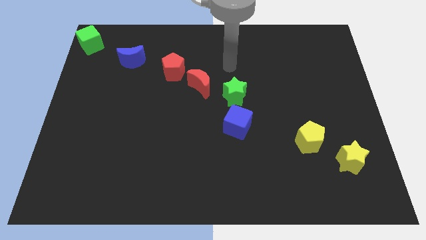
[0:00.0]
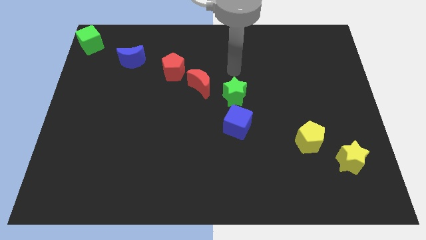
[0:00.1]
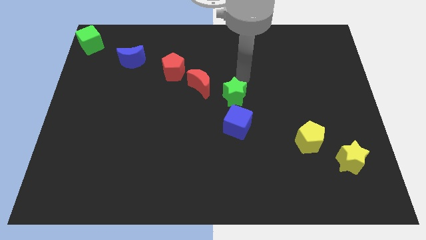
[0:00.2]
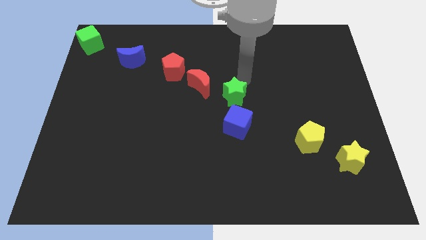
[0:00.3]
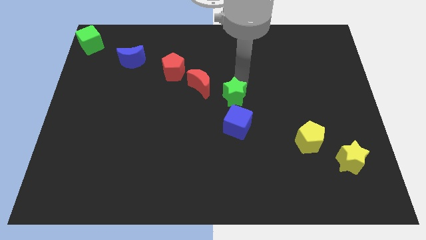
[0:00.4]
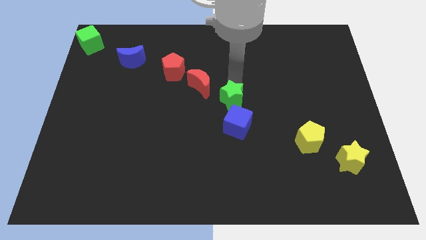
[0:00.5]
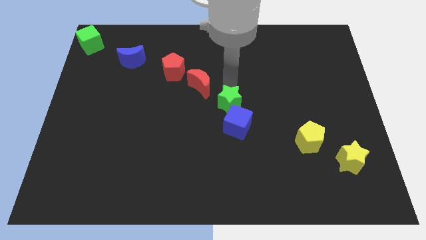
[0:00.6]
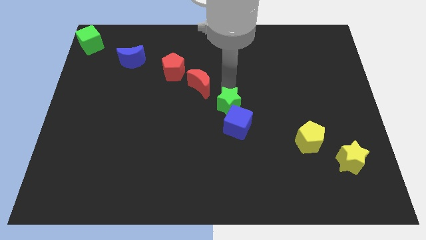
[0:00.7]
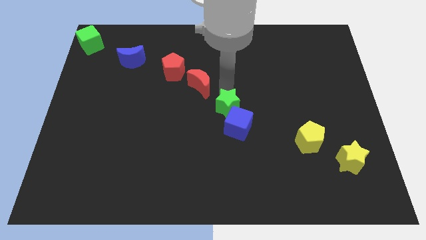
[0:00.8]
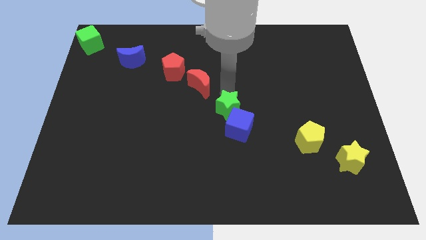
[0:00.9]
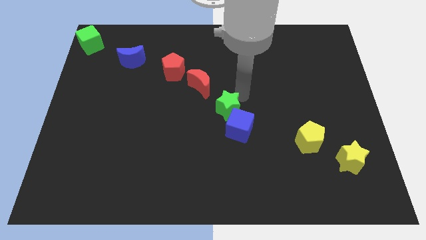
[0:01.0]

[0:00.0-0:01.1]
push the green star into the blue cube

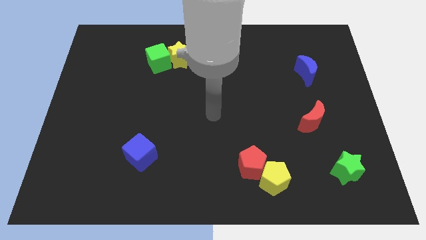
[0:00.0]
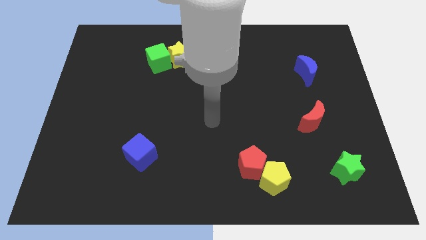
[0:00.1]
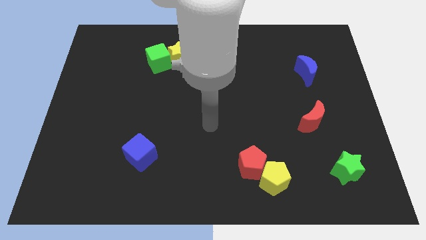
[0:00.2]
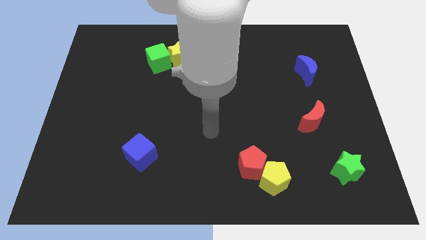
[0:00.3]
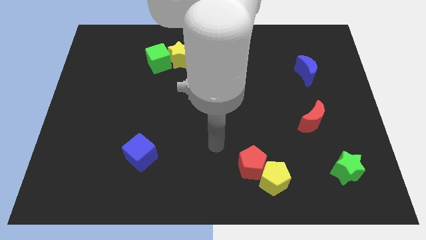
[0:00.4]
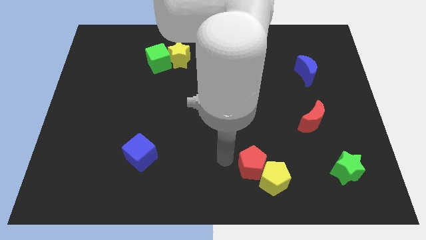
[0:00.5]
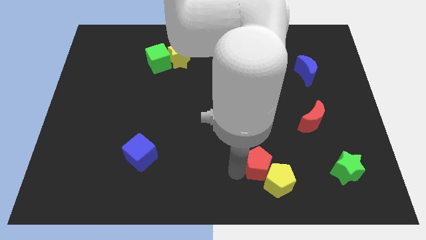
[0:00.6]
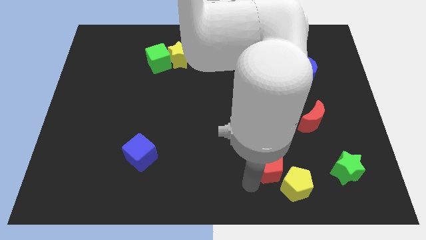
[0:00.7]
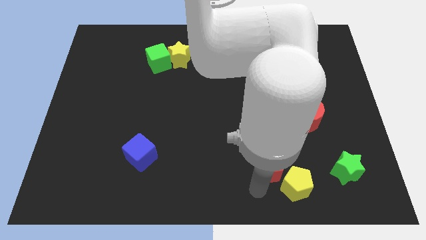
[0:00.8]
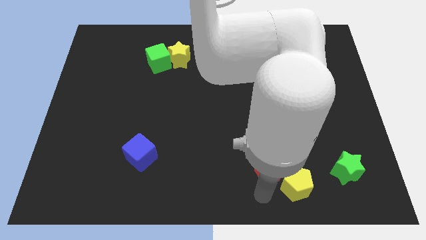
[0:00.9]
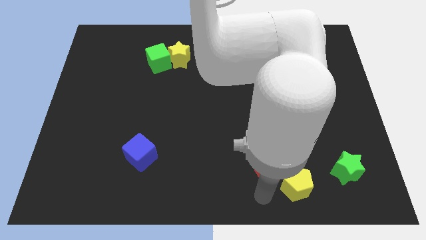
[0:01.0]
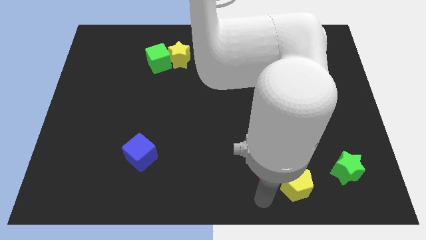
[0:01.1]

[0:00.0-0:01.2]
slightly push the group of pentagons to the right

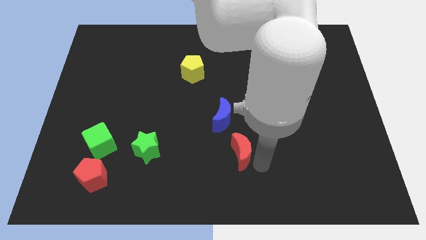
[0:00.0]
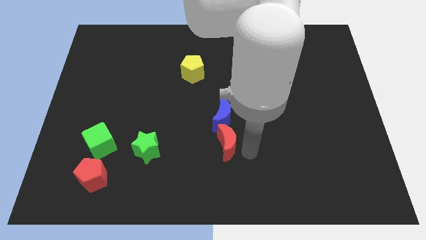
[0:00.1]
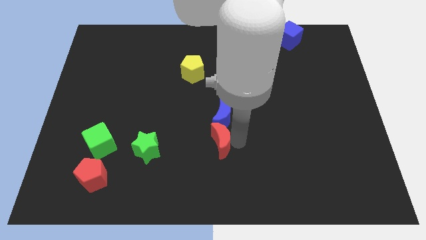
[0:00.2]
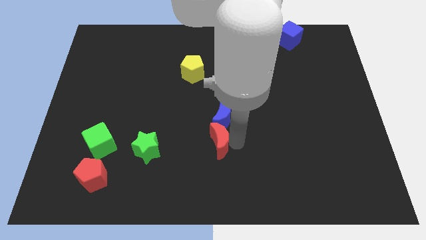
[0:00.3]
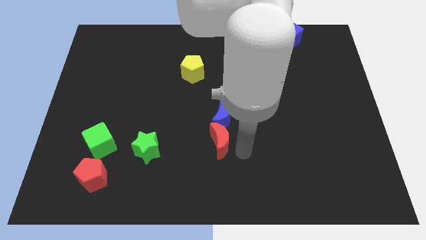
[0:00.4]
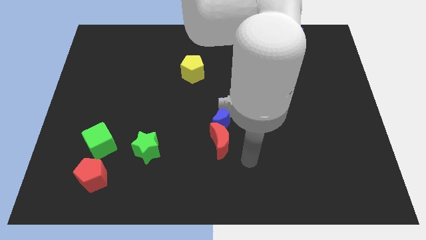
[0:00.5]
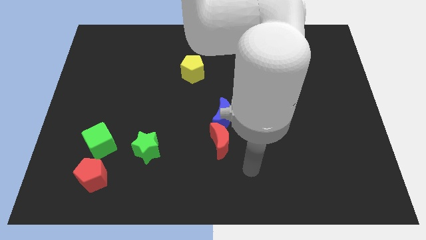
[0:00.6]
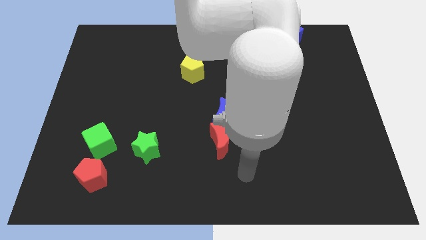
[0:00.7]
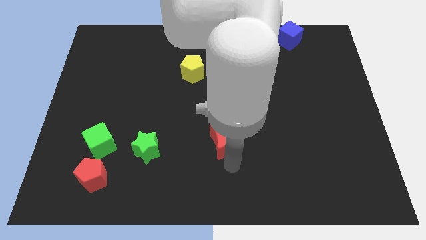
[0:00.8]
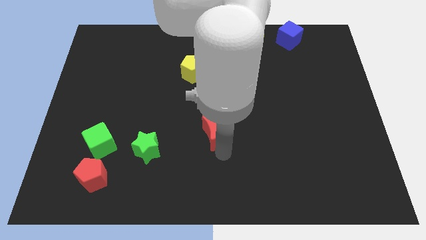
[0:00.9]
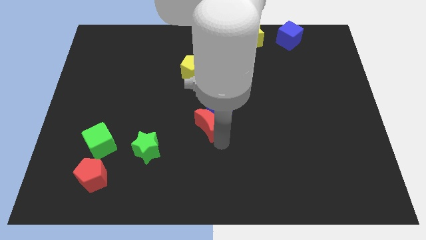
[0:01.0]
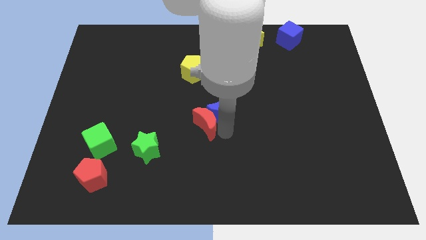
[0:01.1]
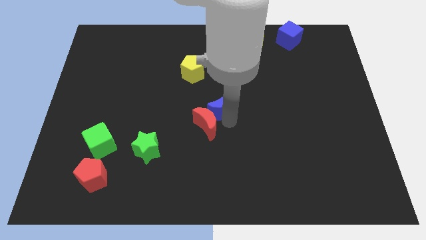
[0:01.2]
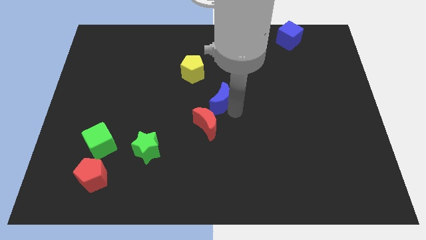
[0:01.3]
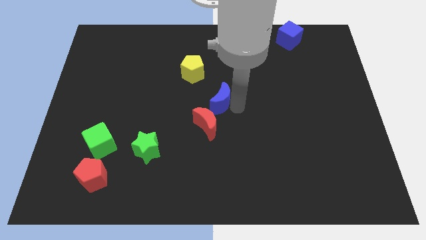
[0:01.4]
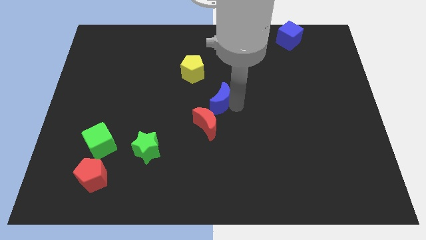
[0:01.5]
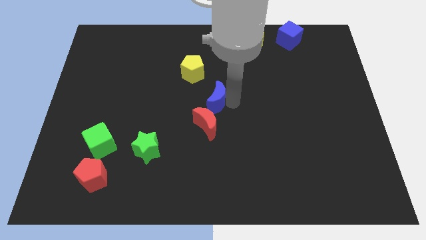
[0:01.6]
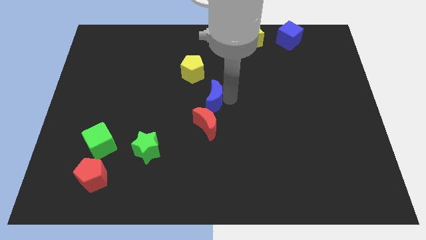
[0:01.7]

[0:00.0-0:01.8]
place the red moon down the blue moon

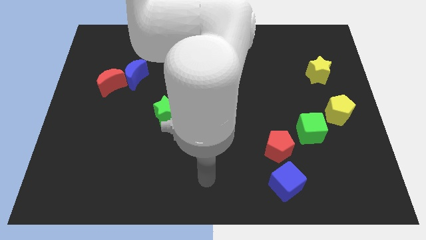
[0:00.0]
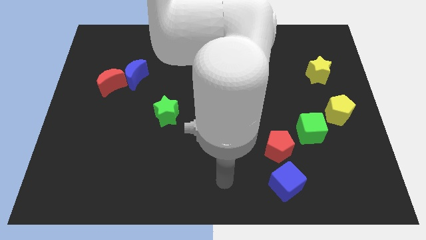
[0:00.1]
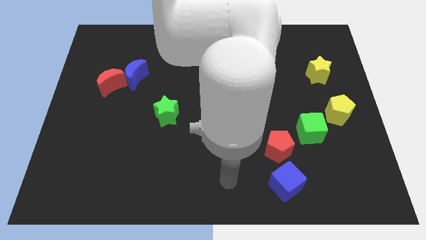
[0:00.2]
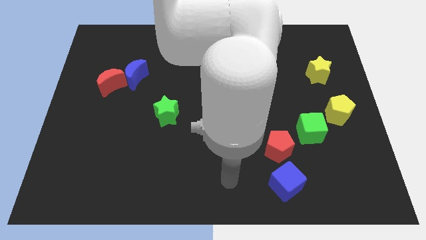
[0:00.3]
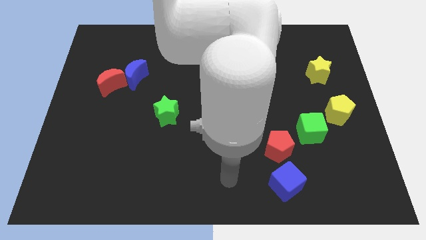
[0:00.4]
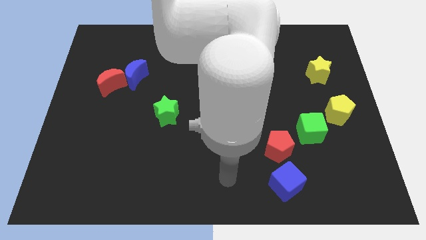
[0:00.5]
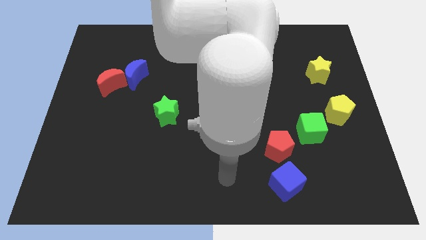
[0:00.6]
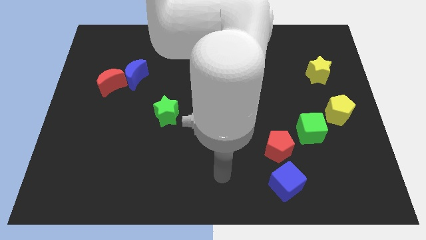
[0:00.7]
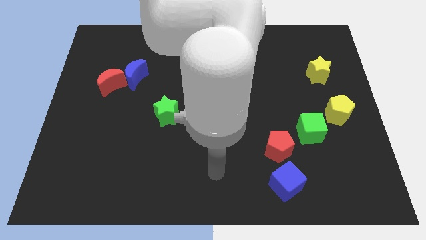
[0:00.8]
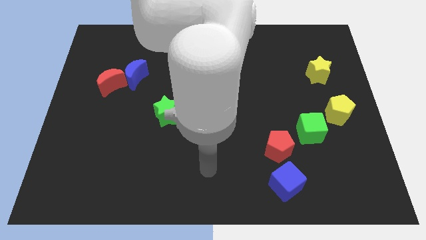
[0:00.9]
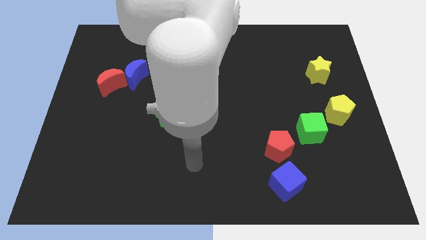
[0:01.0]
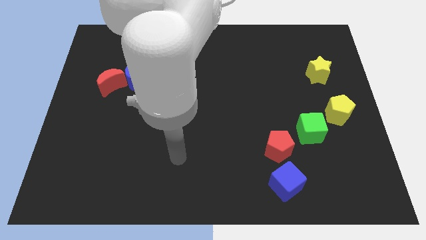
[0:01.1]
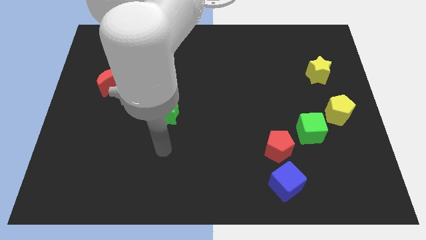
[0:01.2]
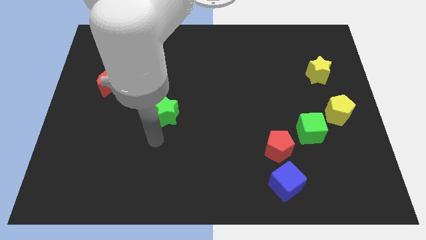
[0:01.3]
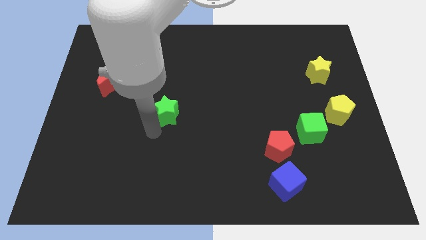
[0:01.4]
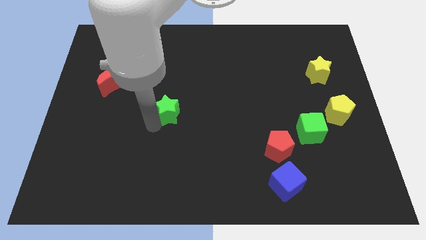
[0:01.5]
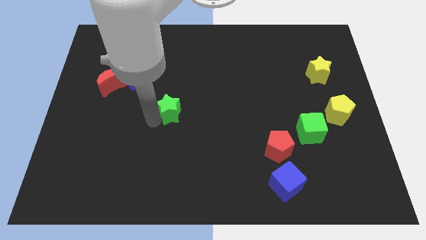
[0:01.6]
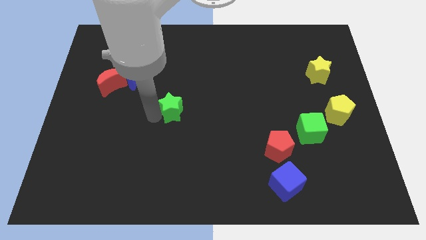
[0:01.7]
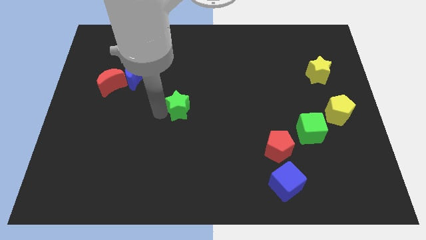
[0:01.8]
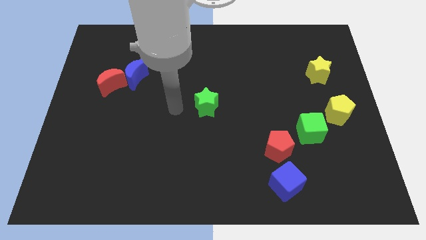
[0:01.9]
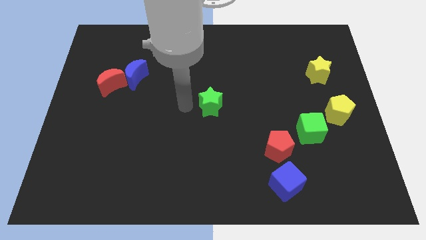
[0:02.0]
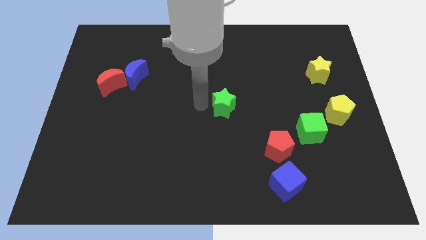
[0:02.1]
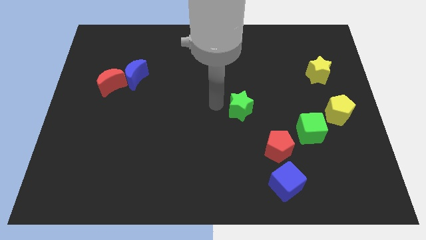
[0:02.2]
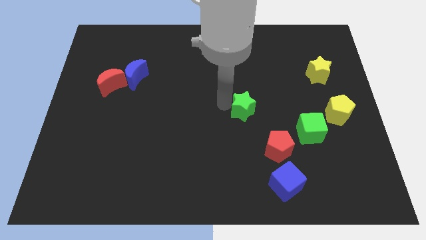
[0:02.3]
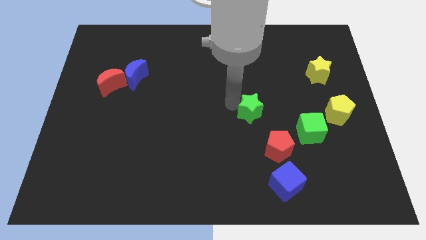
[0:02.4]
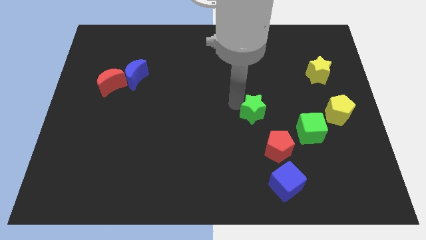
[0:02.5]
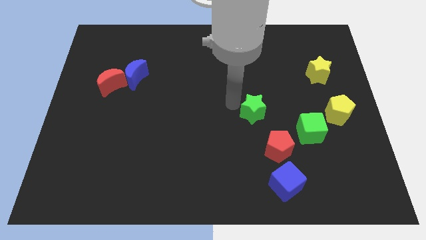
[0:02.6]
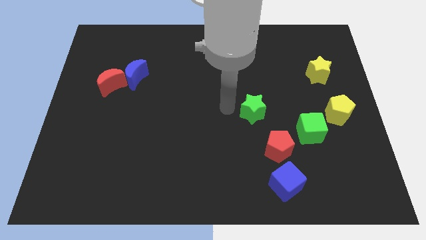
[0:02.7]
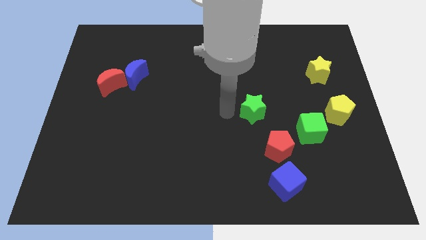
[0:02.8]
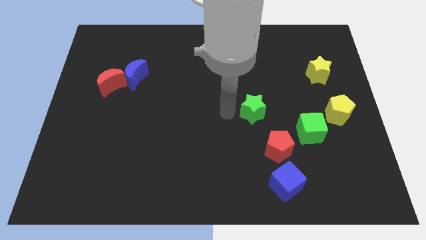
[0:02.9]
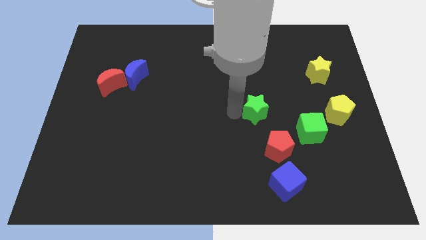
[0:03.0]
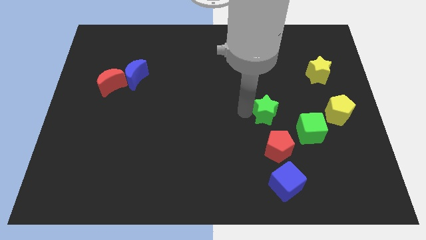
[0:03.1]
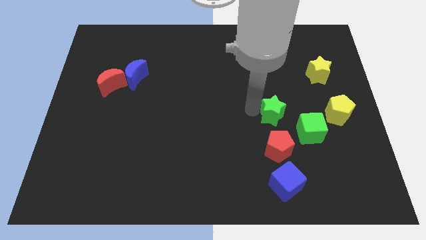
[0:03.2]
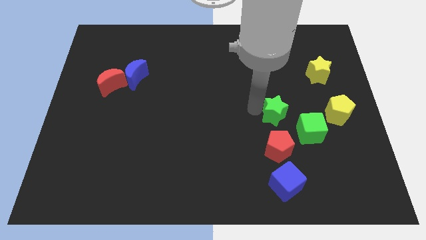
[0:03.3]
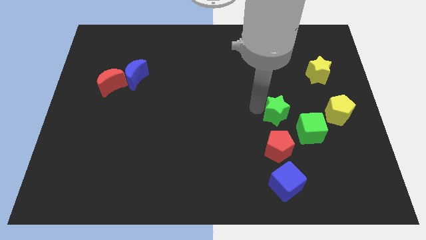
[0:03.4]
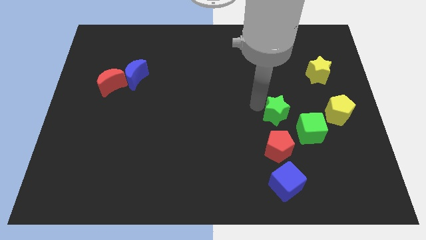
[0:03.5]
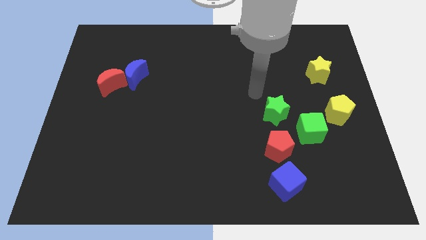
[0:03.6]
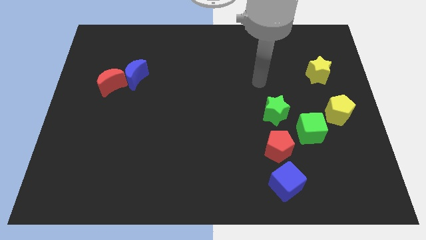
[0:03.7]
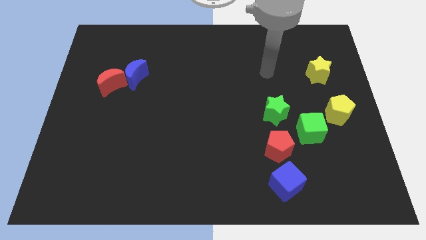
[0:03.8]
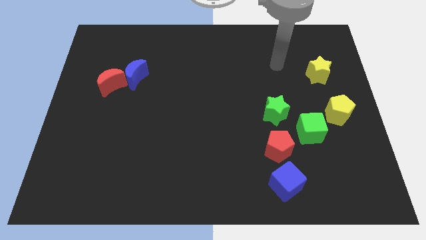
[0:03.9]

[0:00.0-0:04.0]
slide the green star slightly to the right

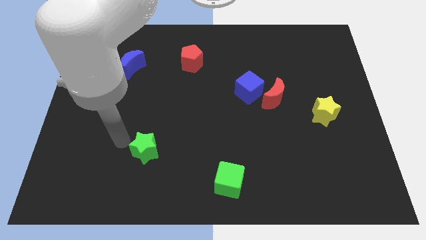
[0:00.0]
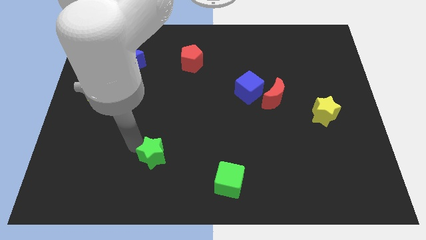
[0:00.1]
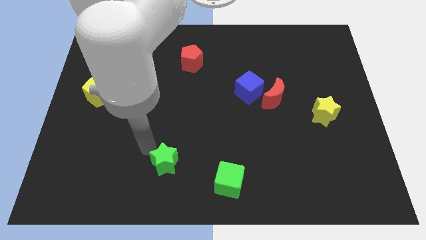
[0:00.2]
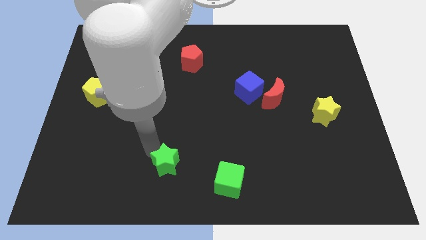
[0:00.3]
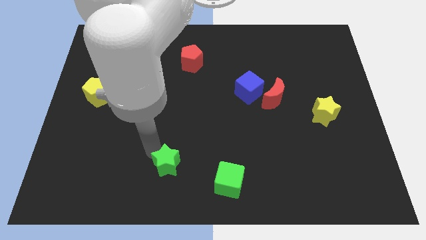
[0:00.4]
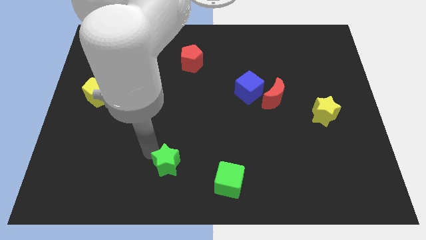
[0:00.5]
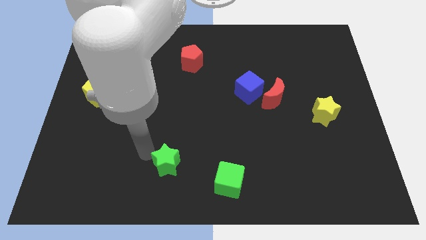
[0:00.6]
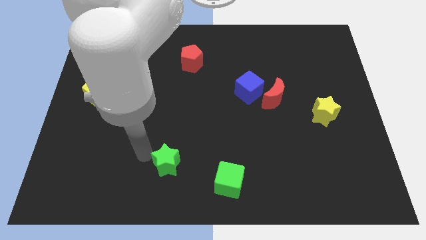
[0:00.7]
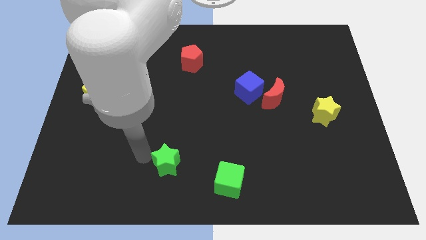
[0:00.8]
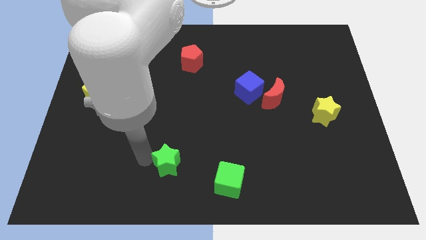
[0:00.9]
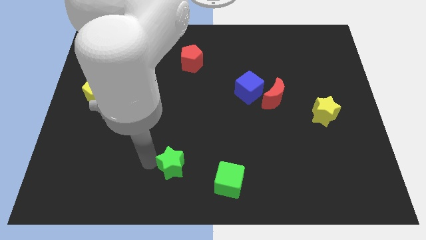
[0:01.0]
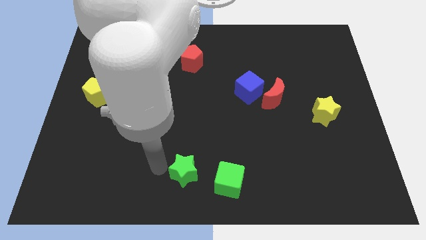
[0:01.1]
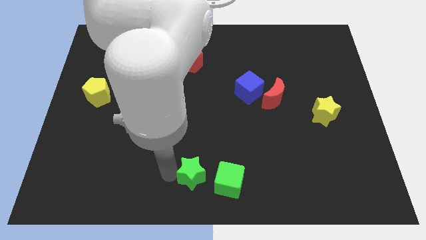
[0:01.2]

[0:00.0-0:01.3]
move the green star left to the green cube
